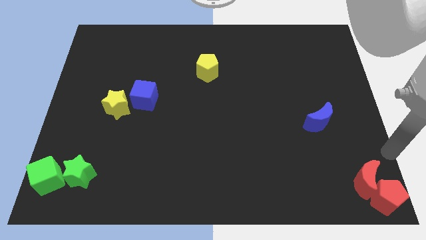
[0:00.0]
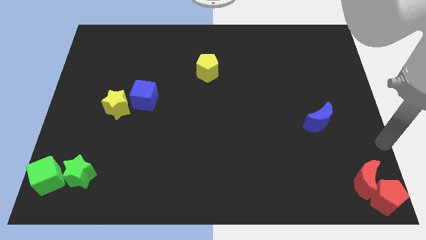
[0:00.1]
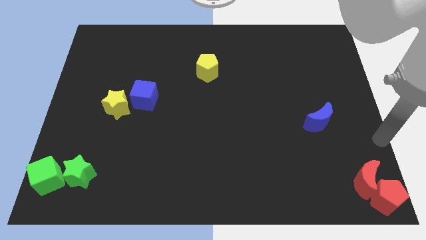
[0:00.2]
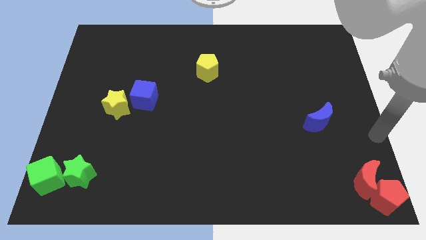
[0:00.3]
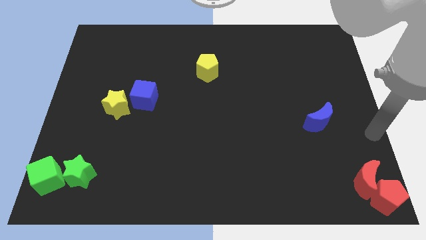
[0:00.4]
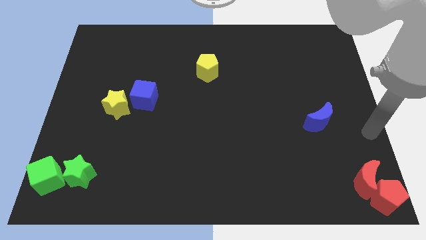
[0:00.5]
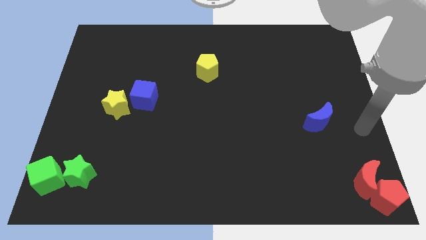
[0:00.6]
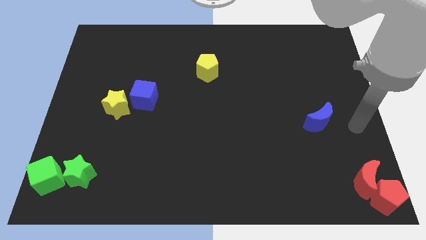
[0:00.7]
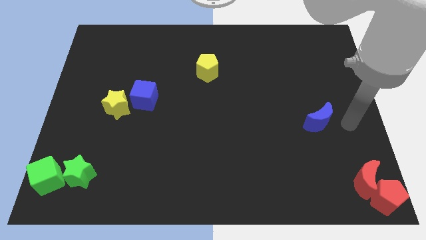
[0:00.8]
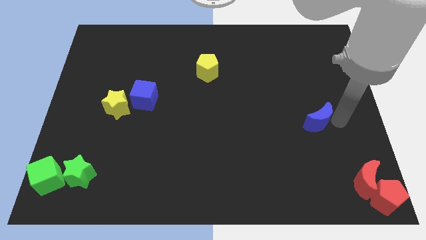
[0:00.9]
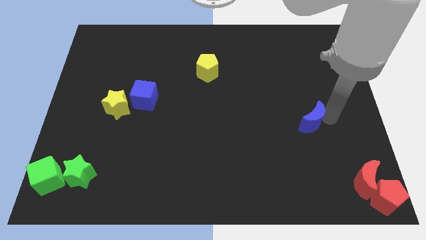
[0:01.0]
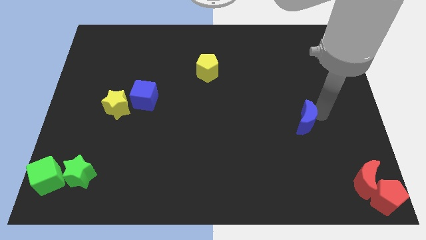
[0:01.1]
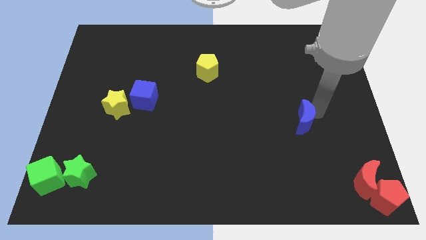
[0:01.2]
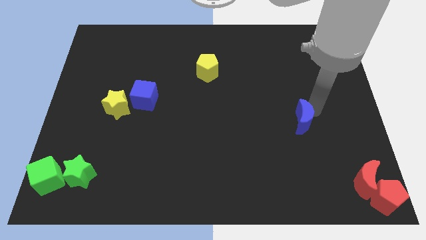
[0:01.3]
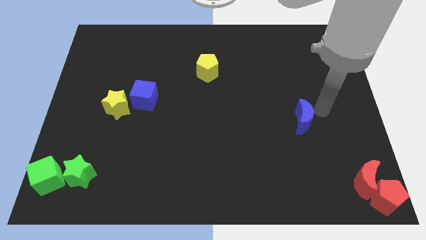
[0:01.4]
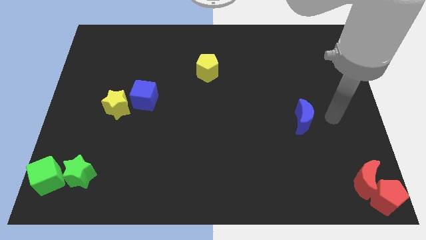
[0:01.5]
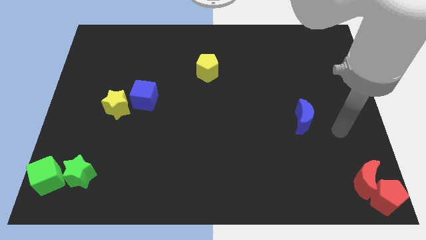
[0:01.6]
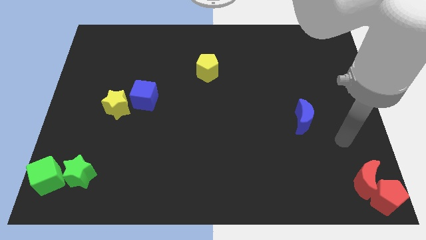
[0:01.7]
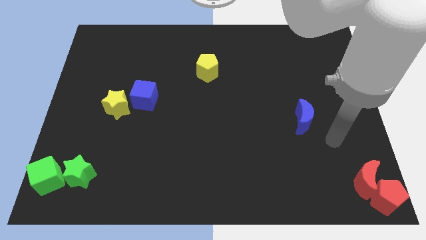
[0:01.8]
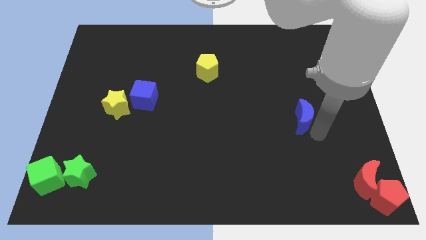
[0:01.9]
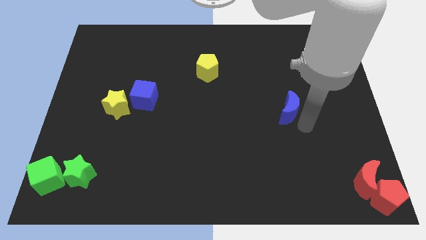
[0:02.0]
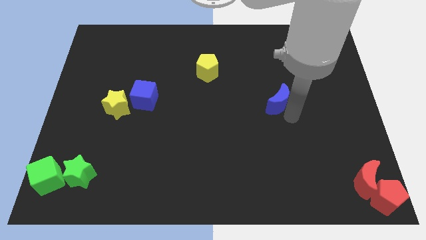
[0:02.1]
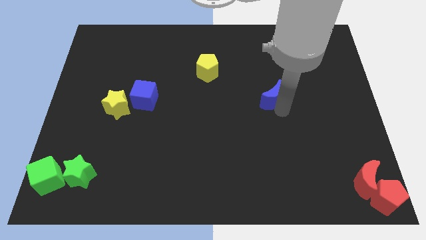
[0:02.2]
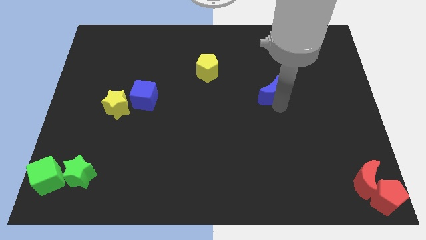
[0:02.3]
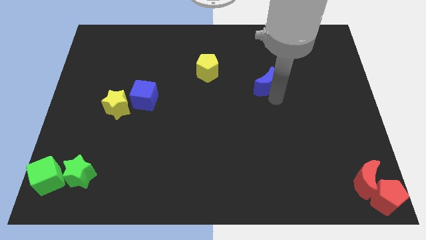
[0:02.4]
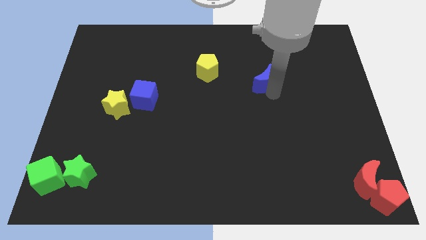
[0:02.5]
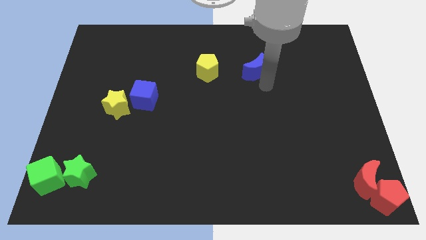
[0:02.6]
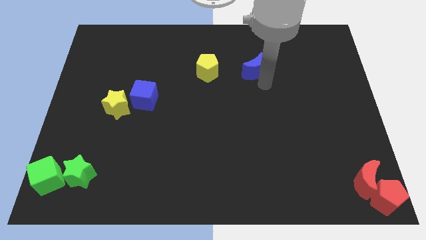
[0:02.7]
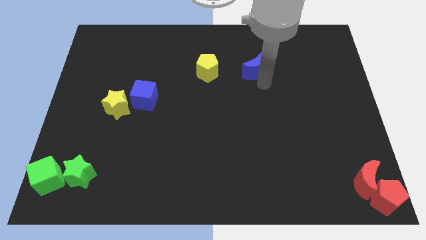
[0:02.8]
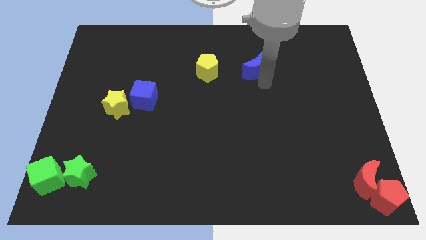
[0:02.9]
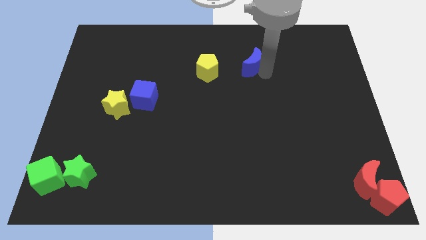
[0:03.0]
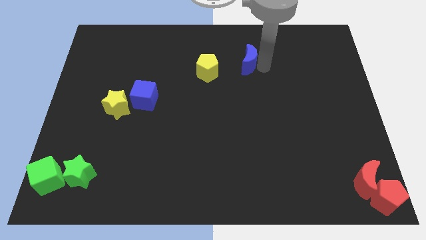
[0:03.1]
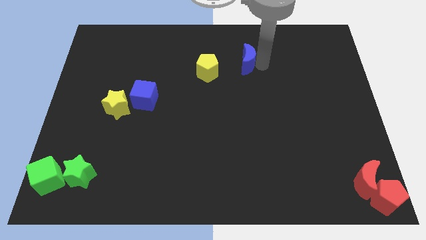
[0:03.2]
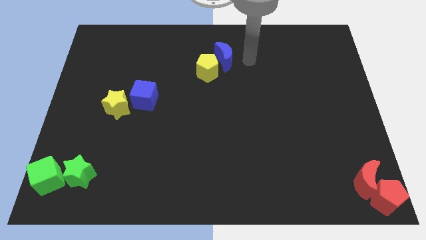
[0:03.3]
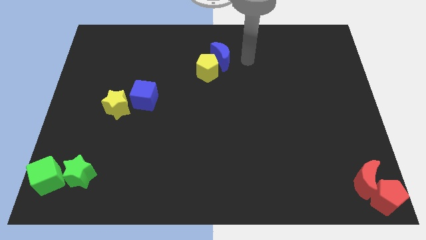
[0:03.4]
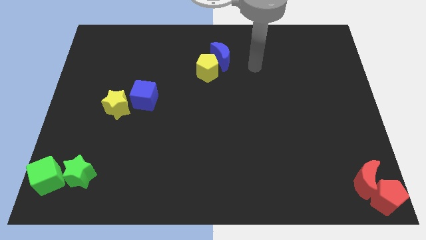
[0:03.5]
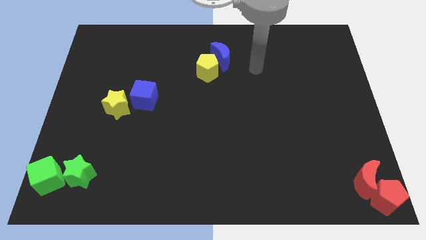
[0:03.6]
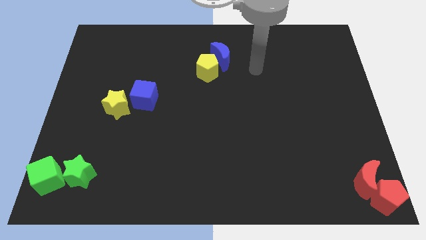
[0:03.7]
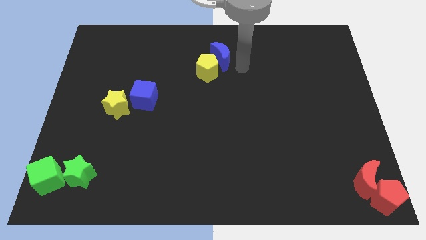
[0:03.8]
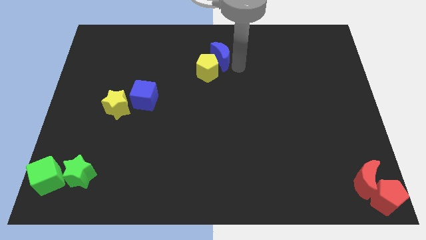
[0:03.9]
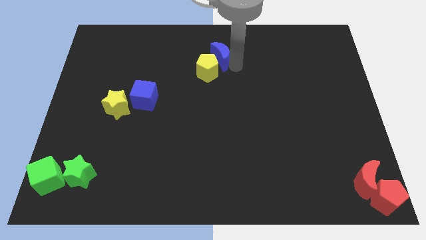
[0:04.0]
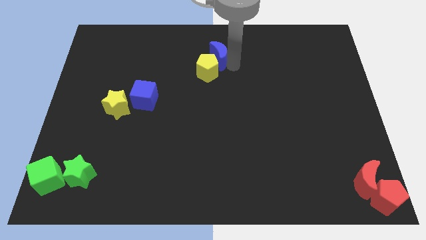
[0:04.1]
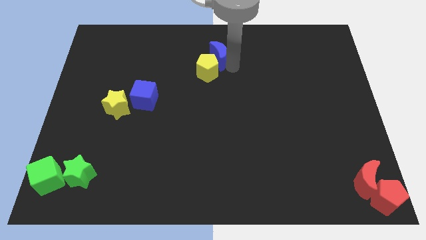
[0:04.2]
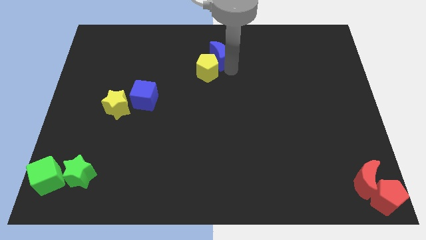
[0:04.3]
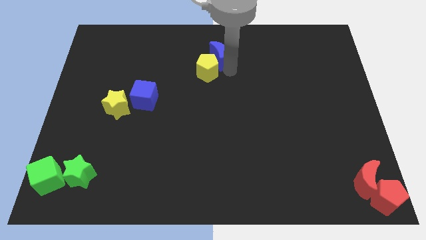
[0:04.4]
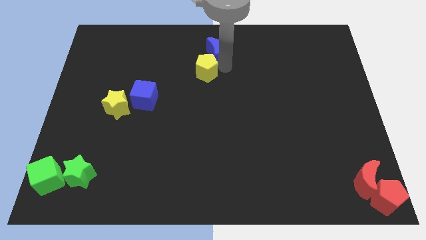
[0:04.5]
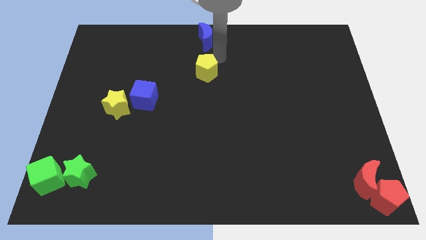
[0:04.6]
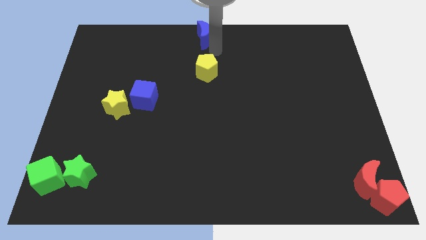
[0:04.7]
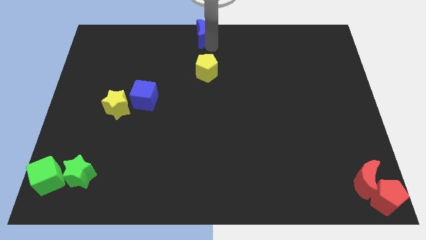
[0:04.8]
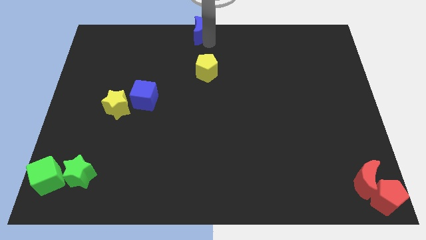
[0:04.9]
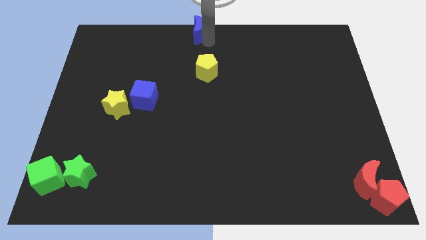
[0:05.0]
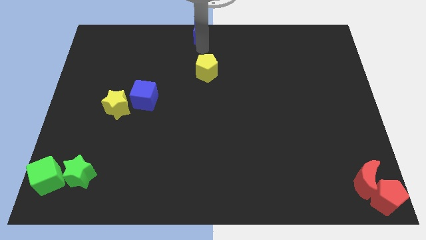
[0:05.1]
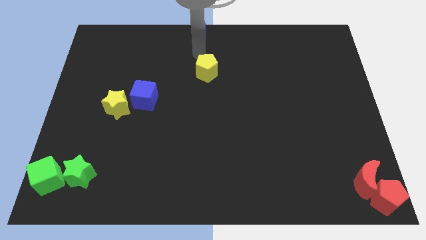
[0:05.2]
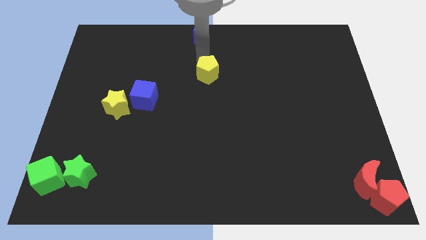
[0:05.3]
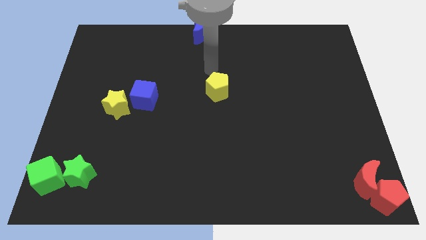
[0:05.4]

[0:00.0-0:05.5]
move the blue crescent at the top center

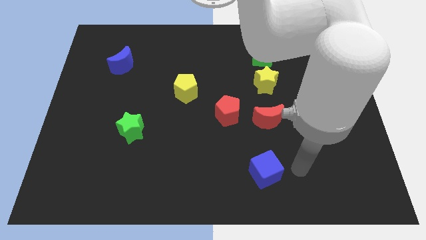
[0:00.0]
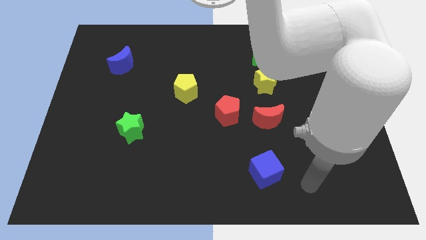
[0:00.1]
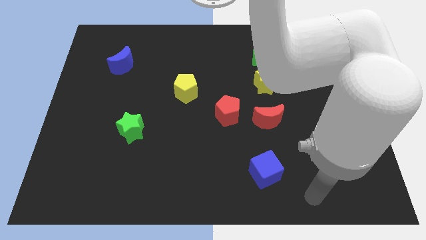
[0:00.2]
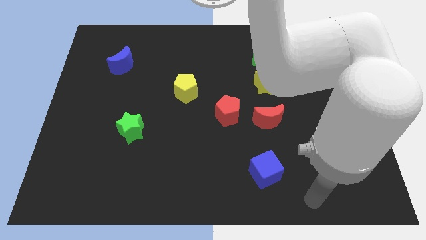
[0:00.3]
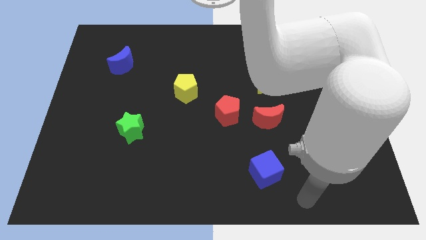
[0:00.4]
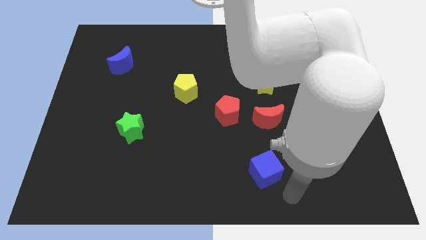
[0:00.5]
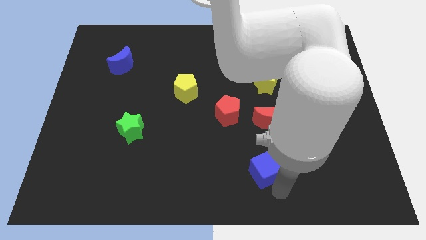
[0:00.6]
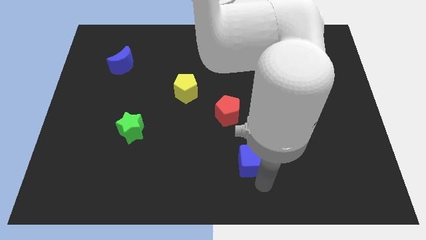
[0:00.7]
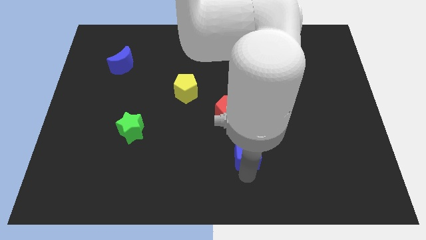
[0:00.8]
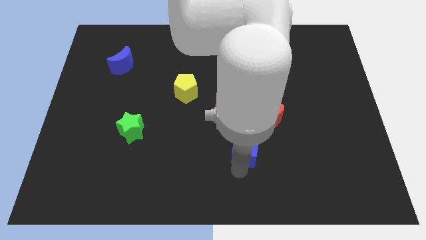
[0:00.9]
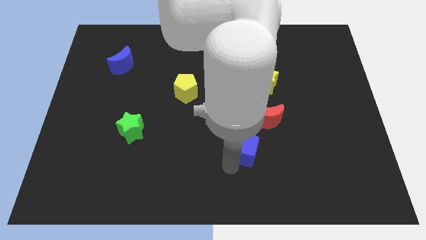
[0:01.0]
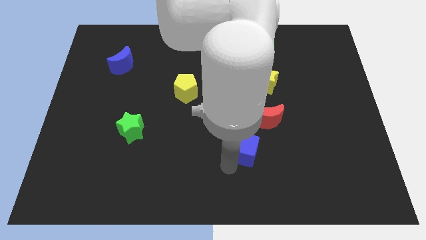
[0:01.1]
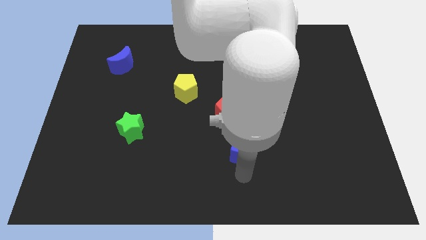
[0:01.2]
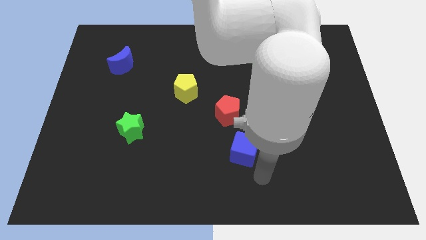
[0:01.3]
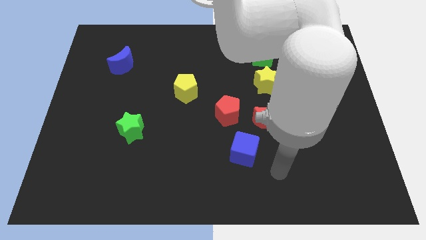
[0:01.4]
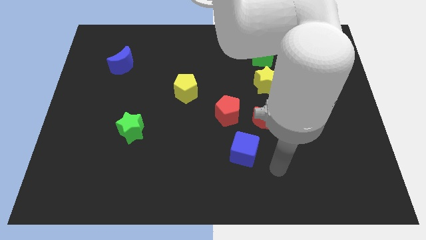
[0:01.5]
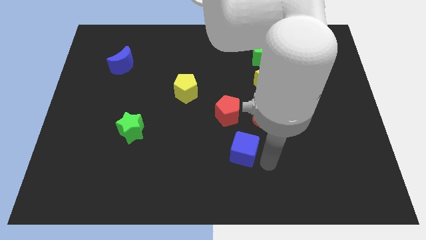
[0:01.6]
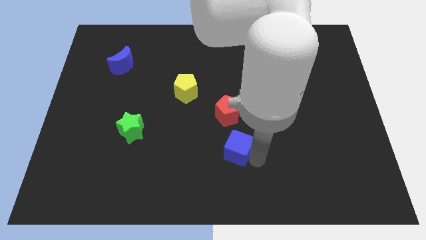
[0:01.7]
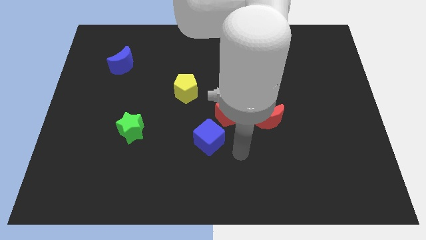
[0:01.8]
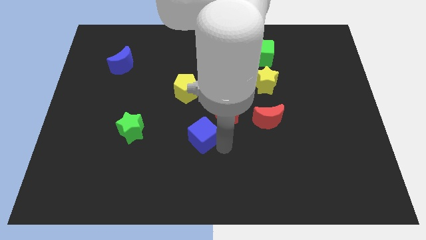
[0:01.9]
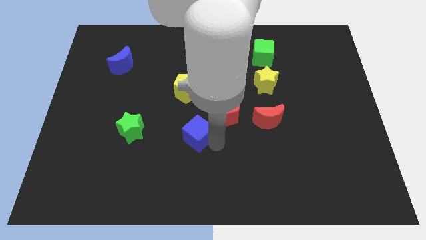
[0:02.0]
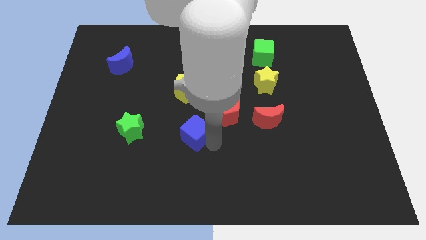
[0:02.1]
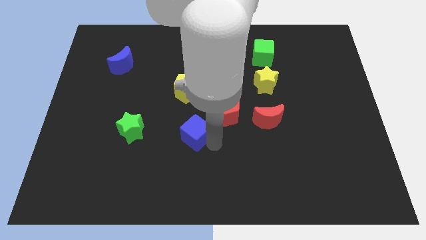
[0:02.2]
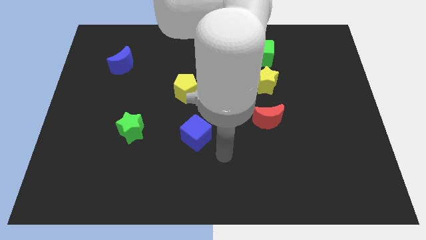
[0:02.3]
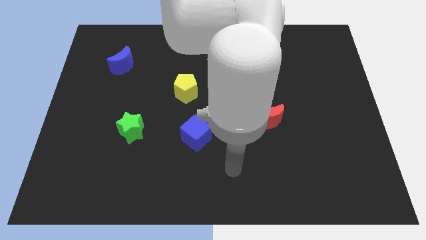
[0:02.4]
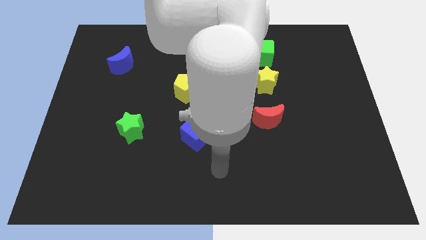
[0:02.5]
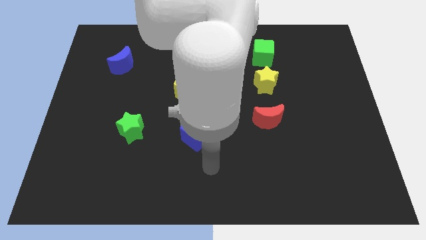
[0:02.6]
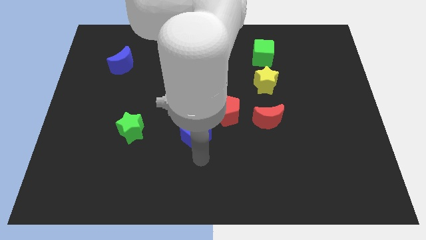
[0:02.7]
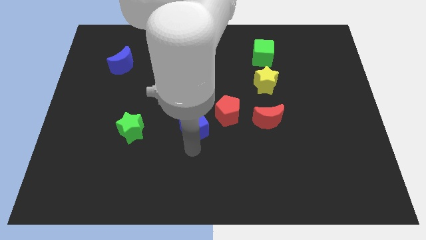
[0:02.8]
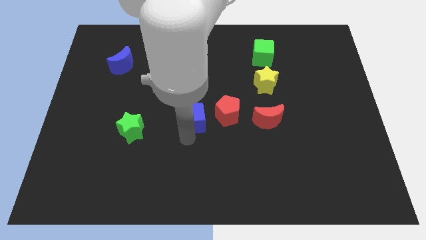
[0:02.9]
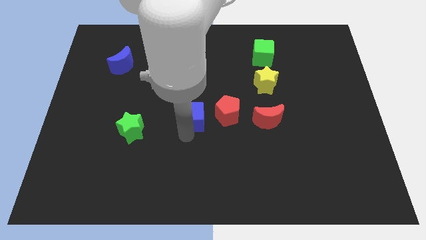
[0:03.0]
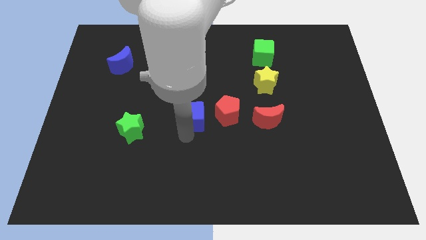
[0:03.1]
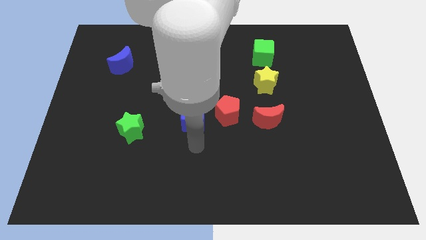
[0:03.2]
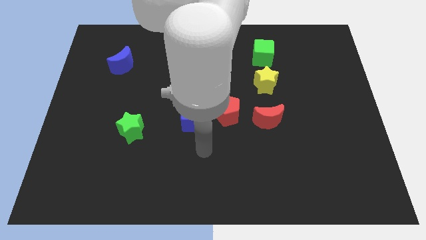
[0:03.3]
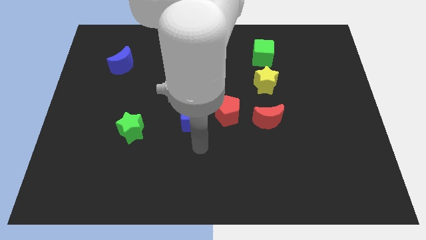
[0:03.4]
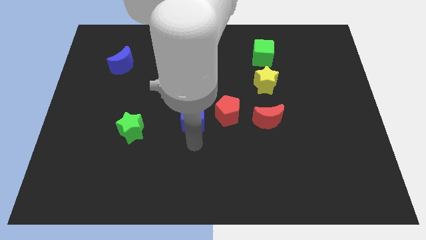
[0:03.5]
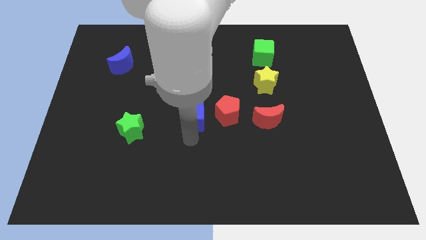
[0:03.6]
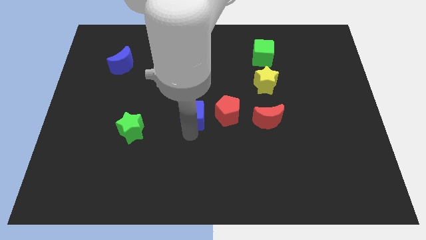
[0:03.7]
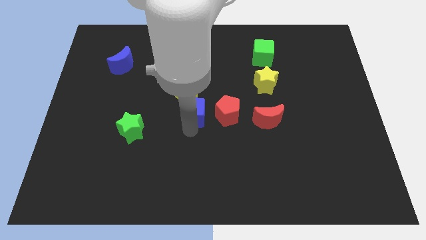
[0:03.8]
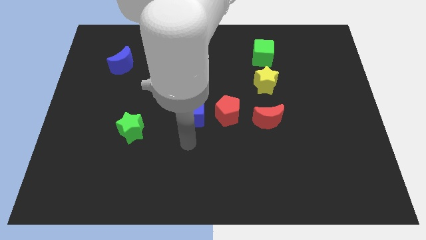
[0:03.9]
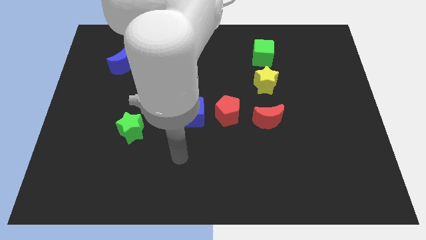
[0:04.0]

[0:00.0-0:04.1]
move the blue cube to the left of the red pentagon
